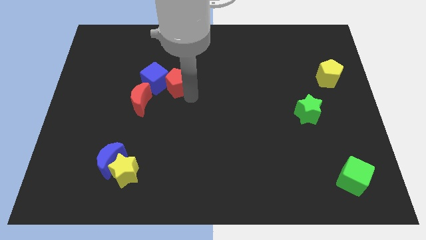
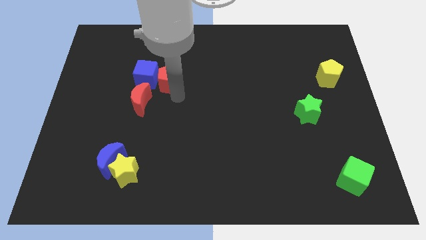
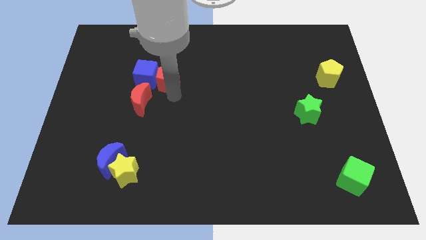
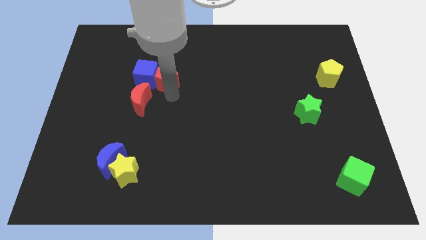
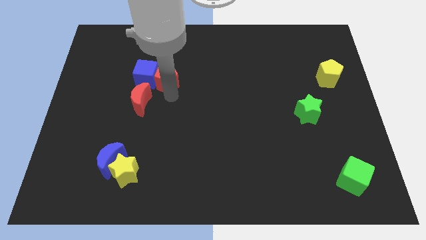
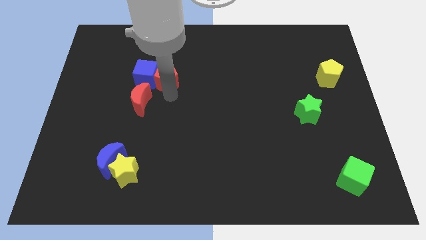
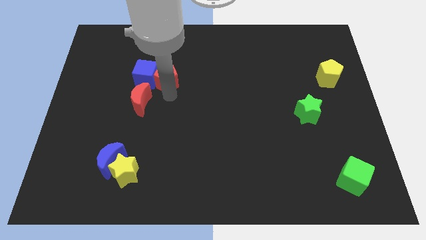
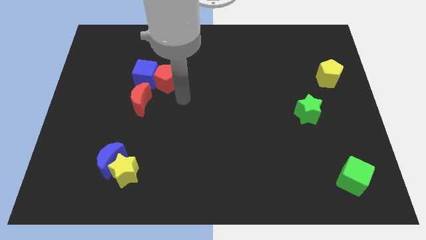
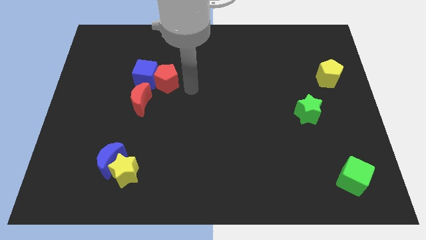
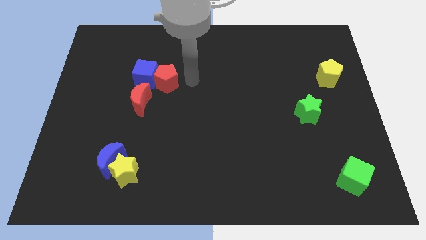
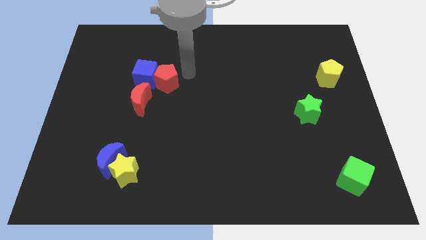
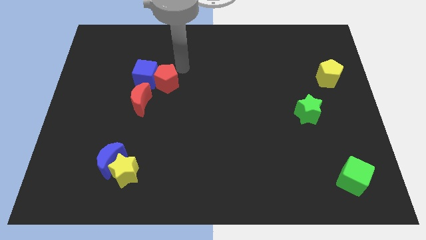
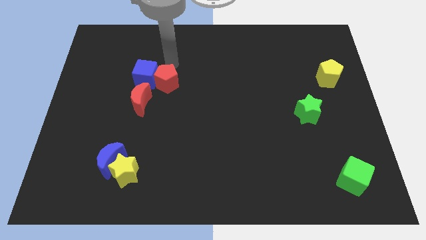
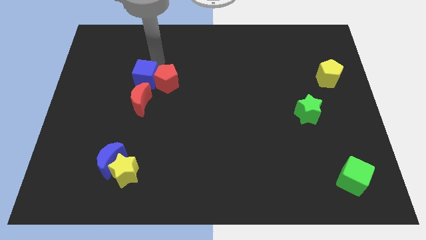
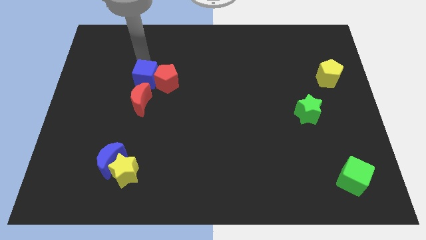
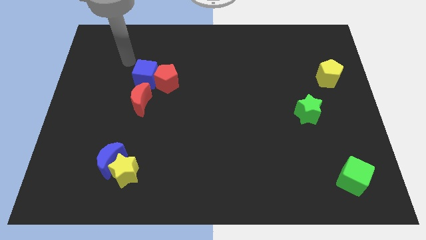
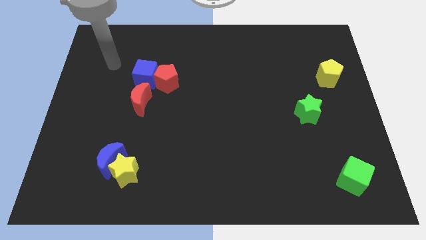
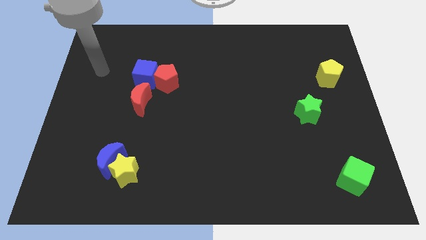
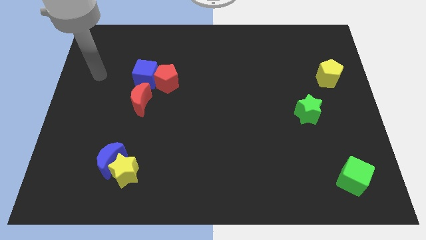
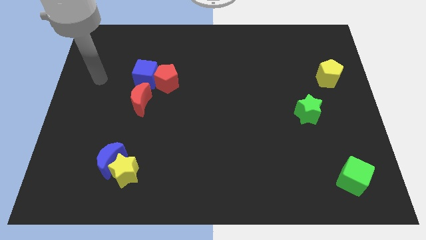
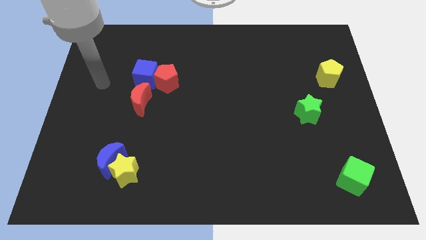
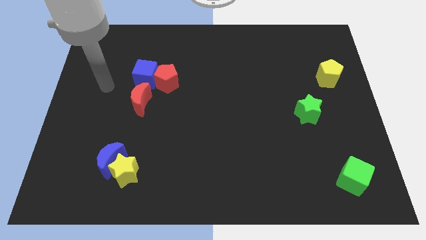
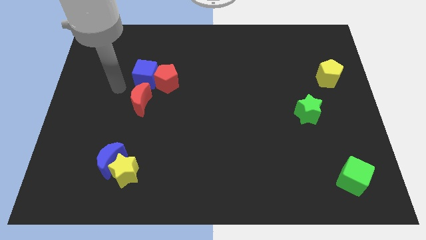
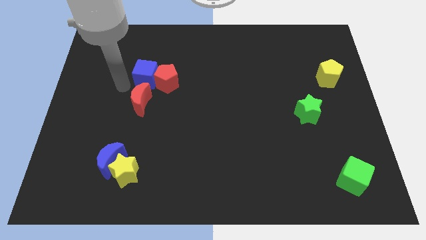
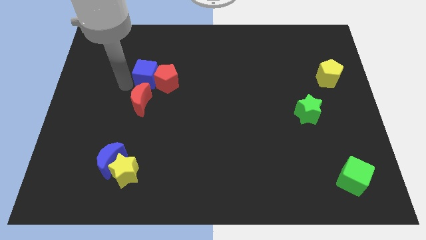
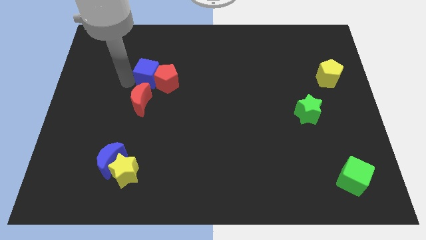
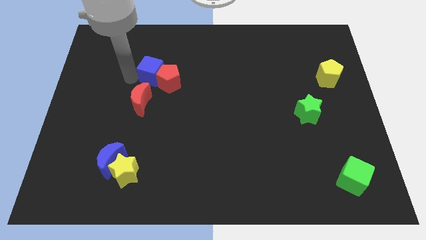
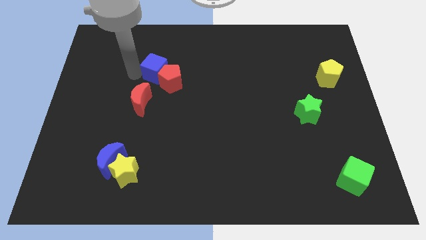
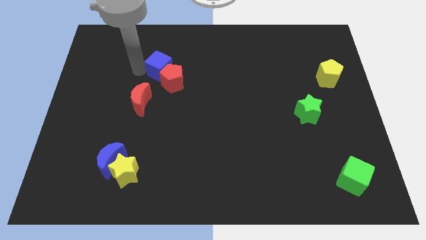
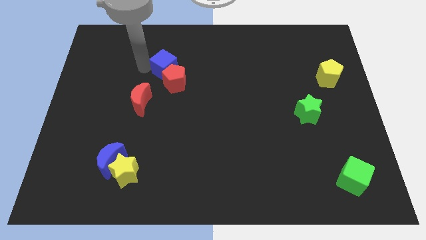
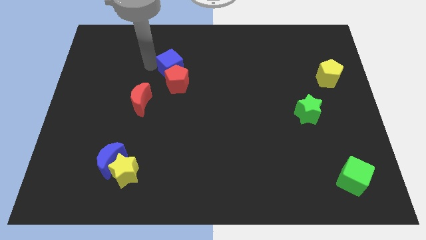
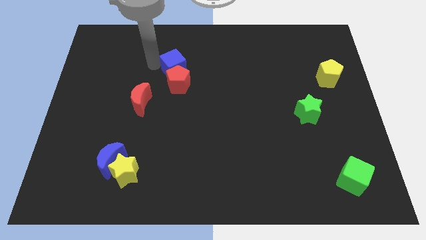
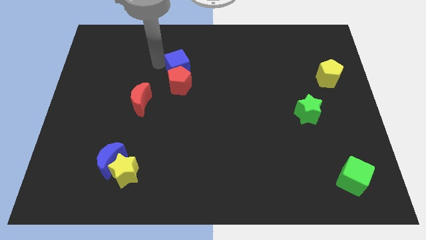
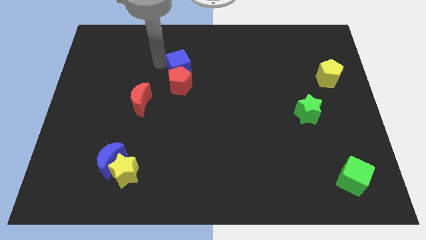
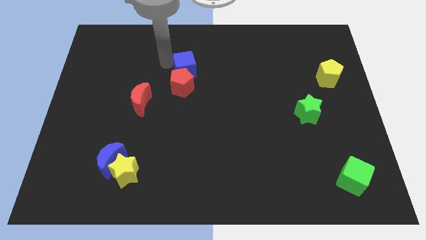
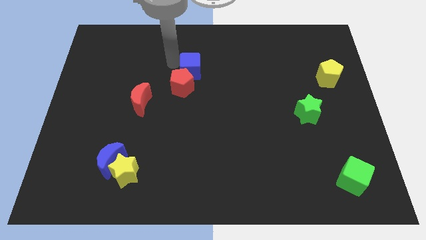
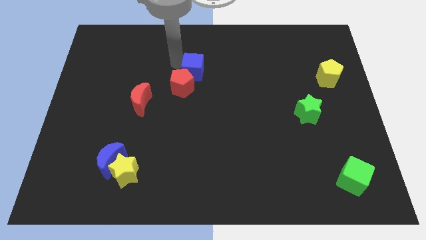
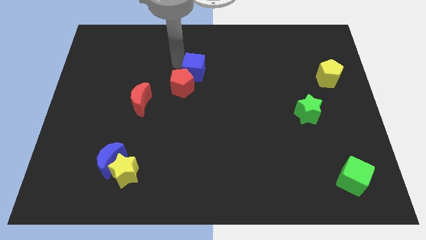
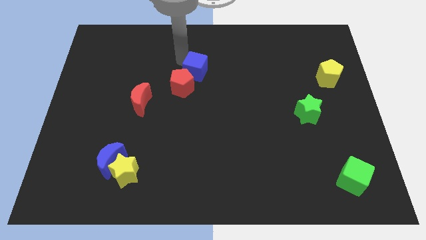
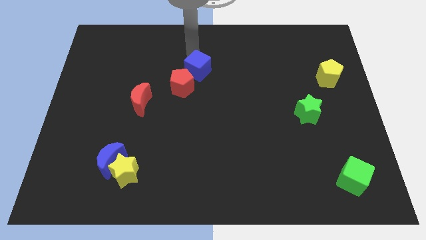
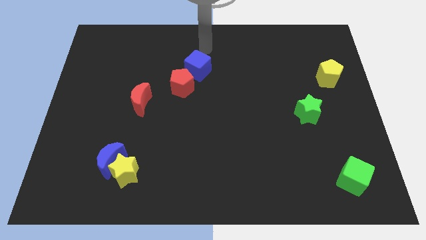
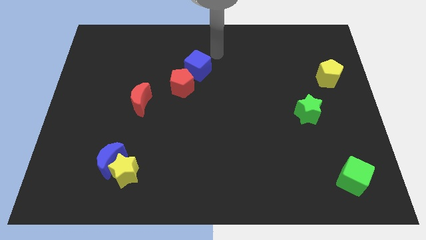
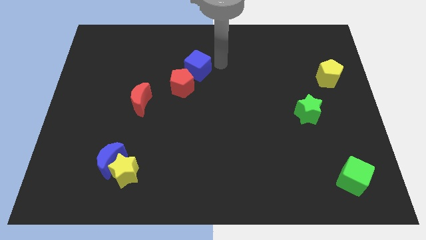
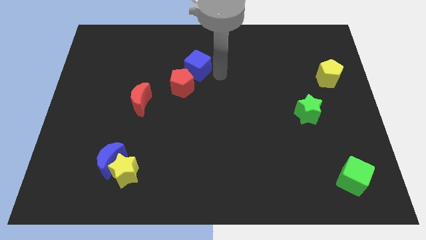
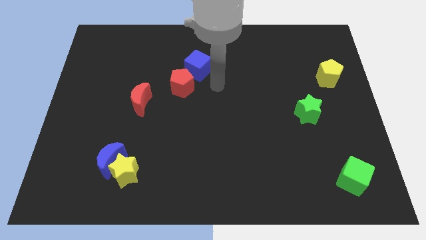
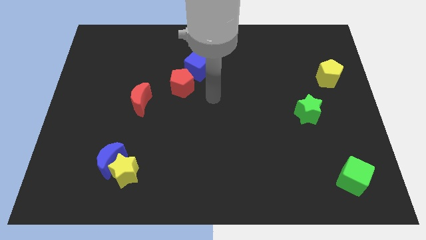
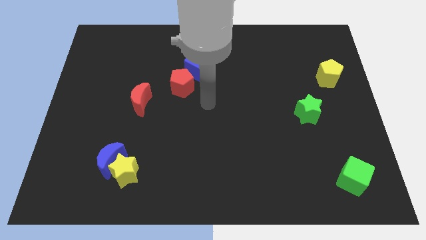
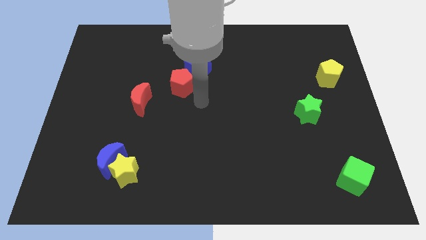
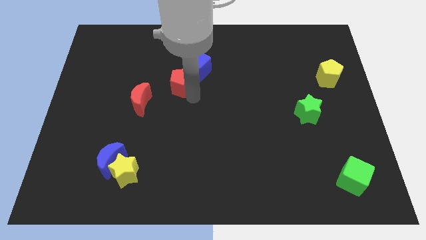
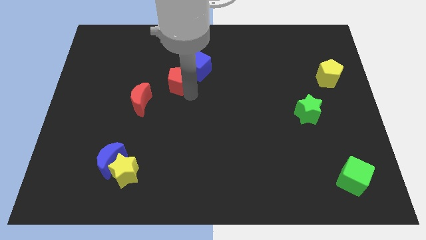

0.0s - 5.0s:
push the red pentagon and the blue cube towards the right side

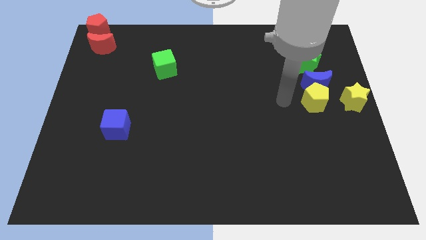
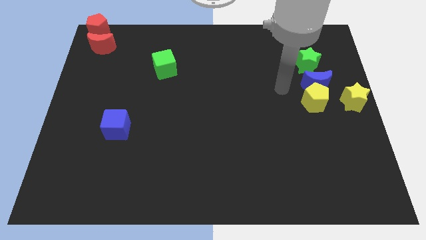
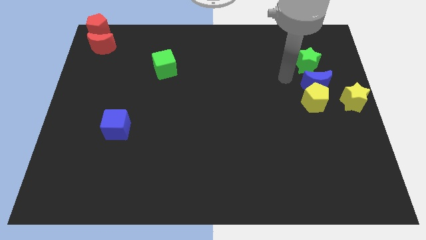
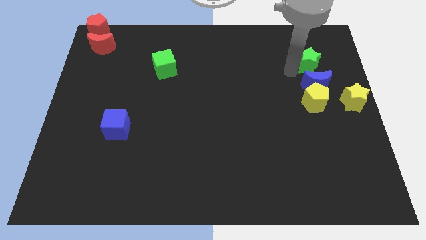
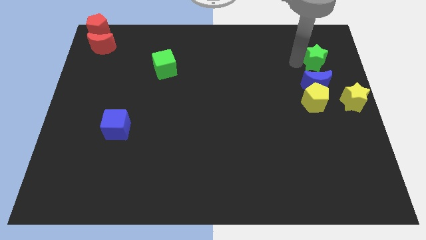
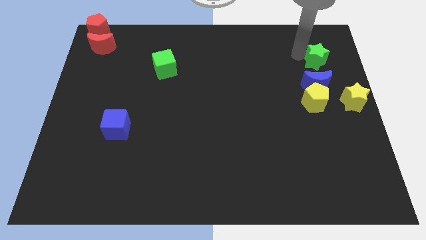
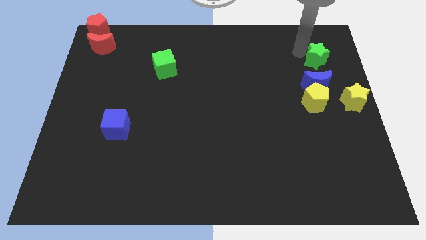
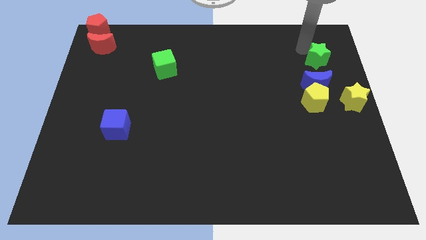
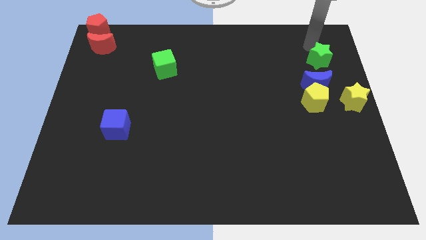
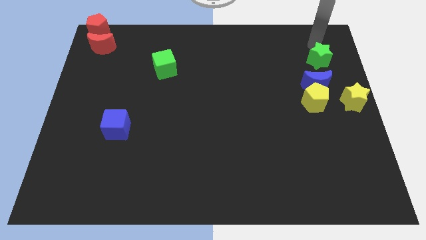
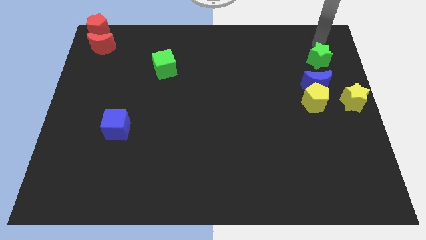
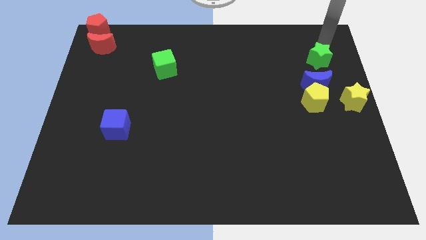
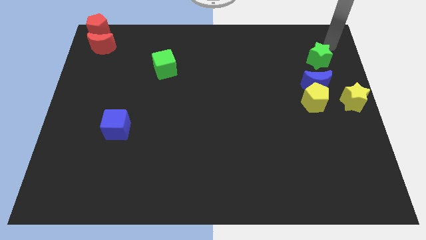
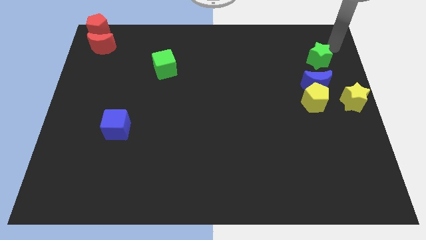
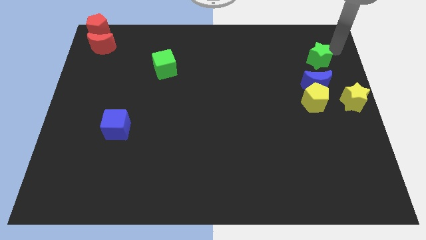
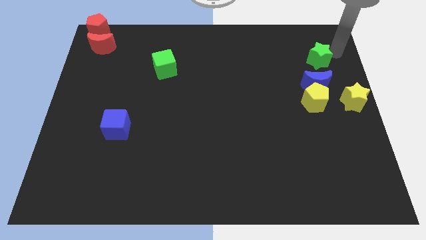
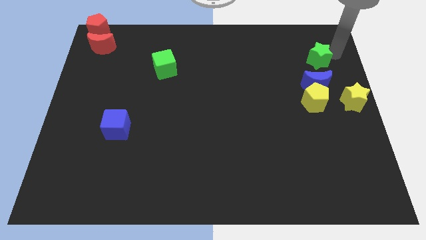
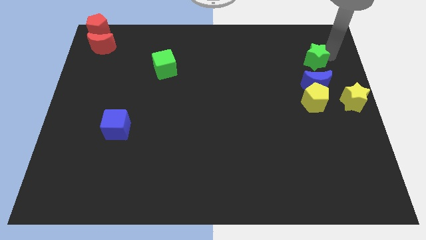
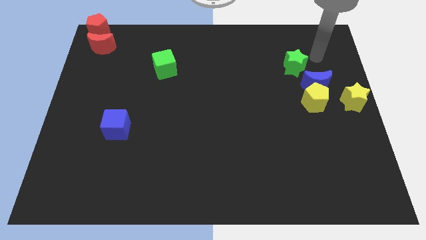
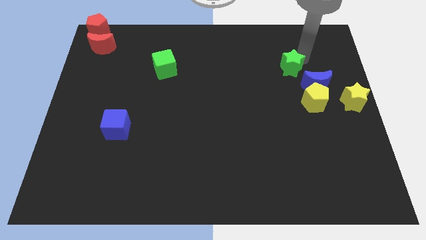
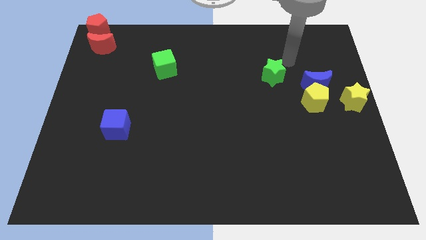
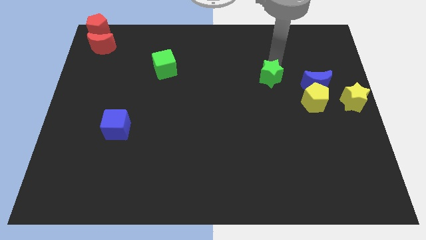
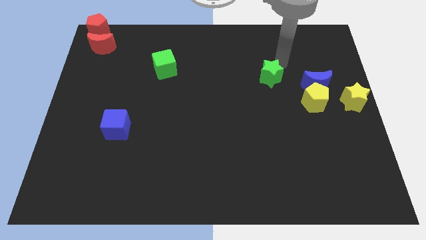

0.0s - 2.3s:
move the green star left to the blue moon

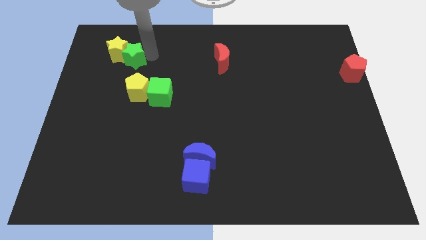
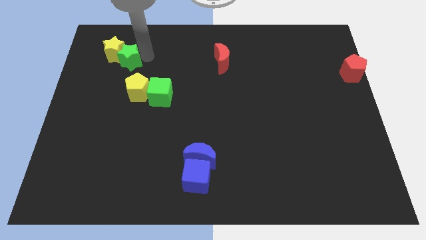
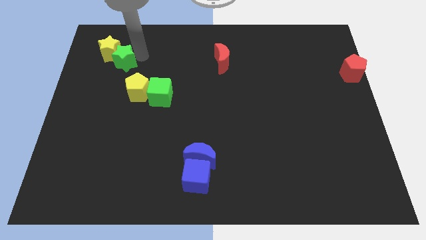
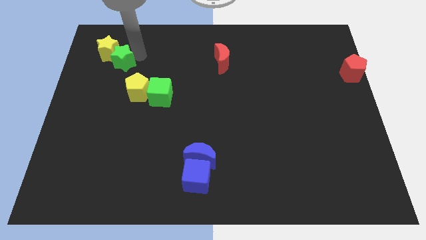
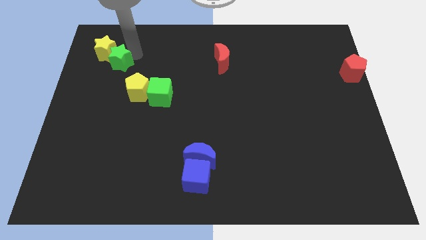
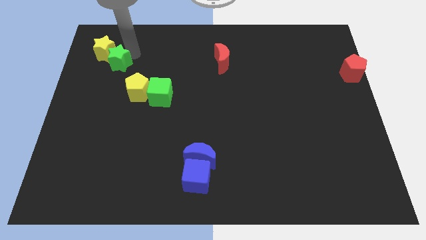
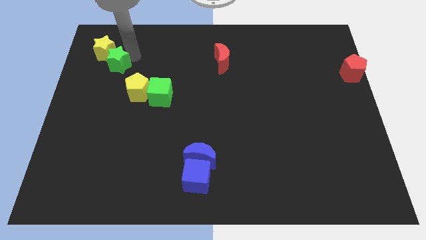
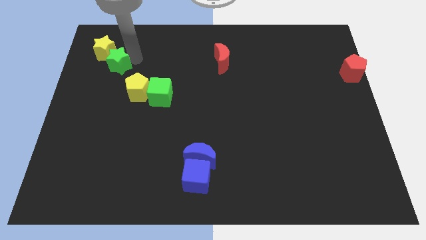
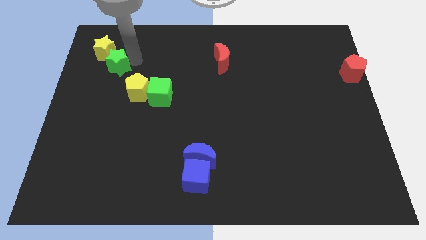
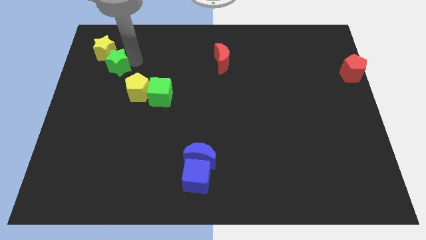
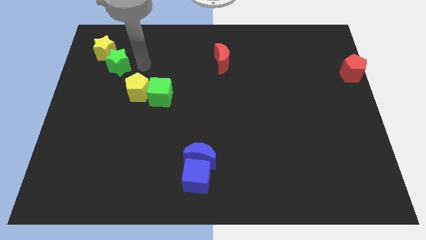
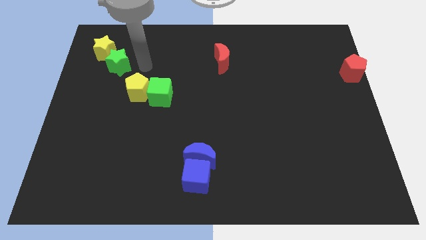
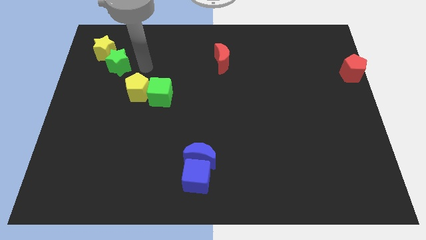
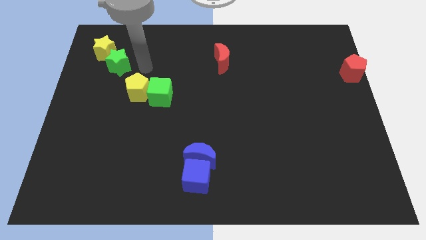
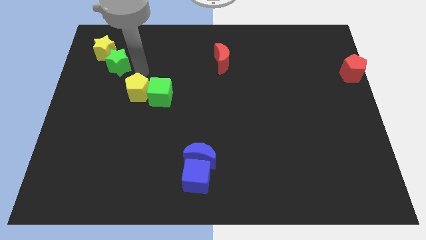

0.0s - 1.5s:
push the green star slightly towards the top left
